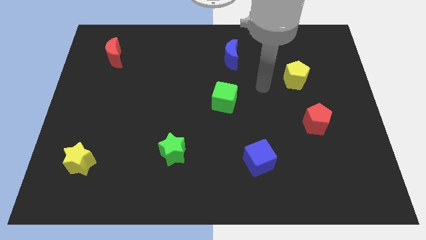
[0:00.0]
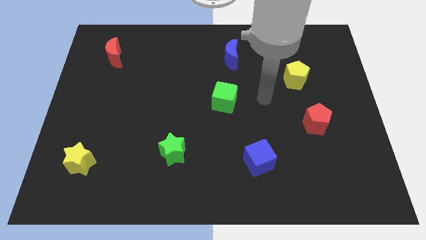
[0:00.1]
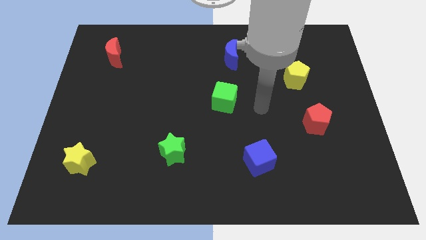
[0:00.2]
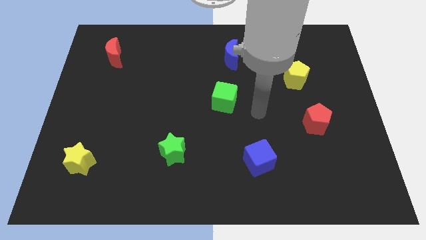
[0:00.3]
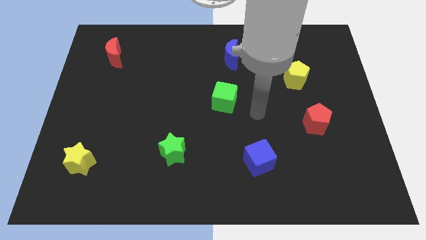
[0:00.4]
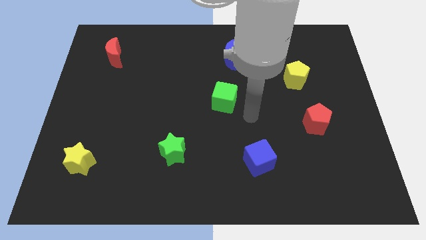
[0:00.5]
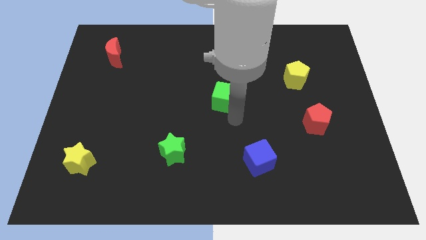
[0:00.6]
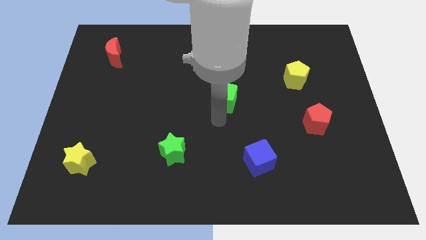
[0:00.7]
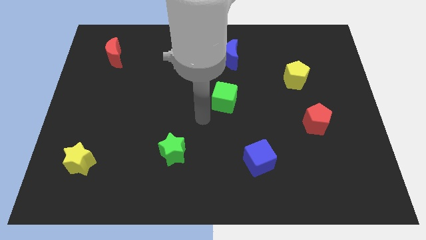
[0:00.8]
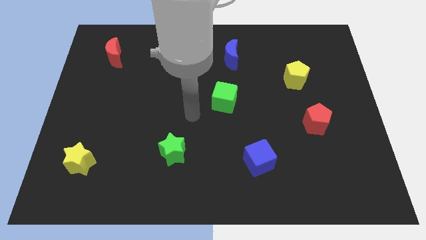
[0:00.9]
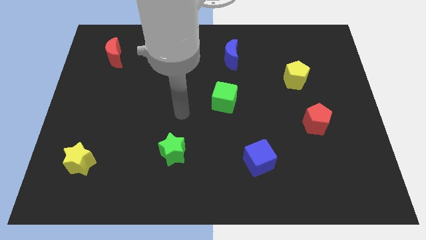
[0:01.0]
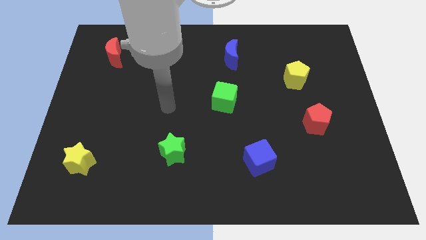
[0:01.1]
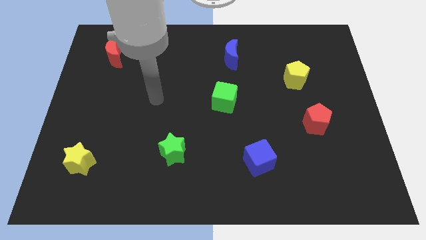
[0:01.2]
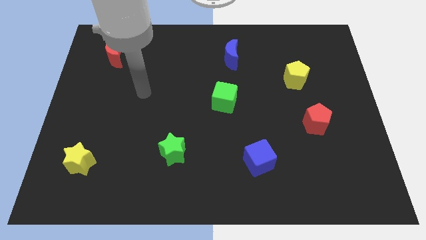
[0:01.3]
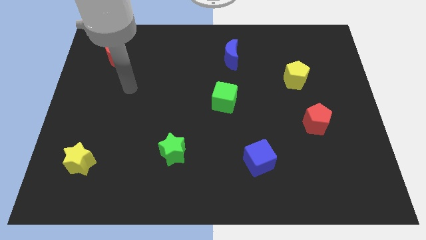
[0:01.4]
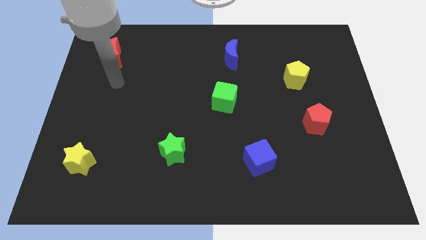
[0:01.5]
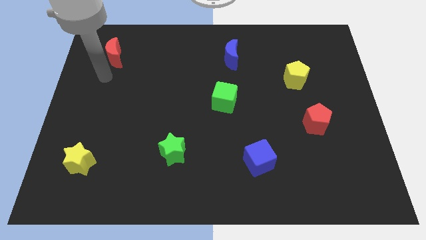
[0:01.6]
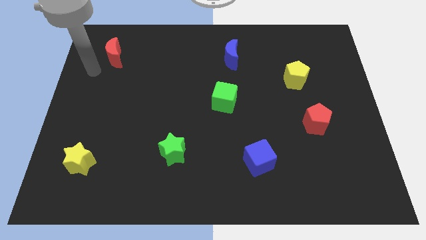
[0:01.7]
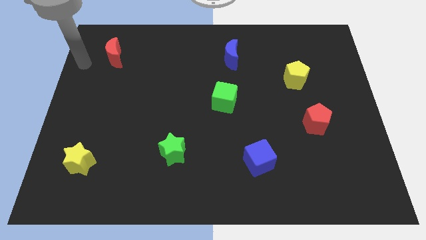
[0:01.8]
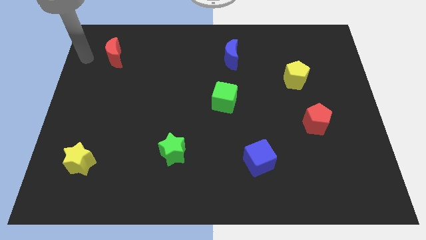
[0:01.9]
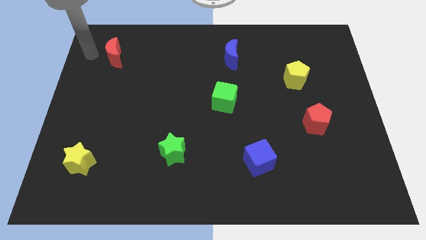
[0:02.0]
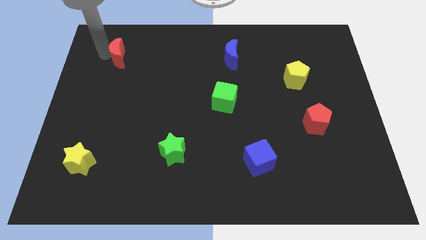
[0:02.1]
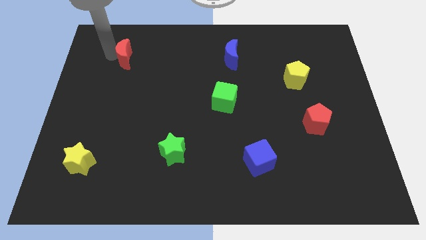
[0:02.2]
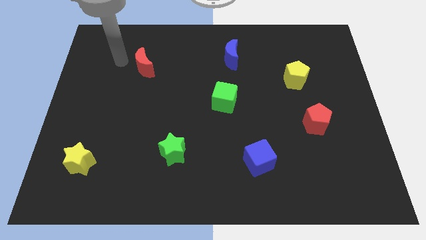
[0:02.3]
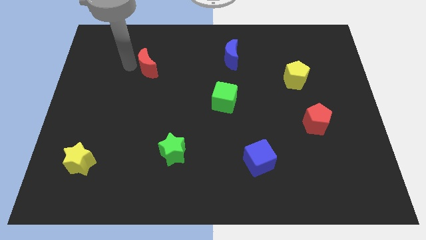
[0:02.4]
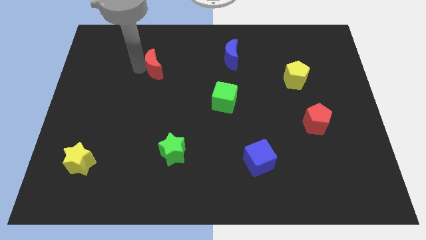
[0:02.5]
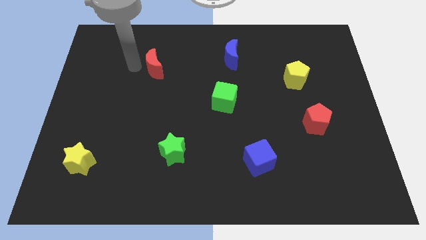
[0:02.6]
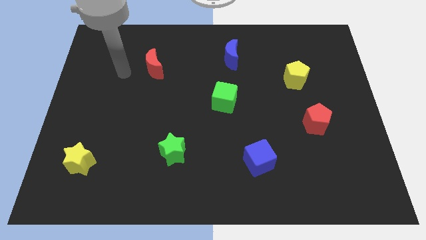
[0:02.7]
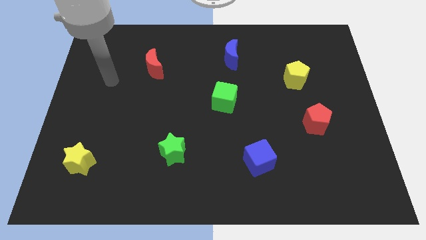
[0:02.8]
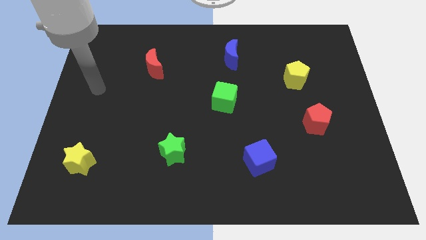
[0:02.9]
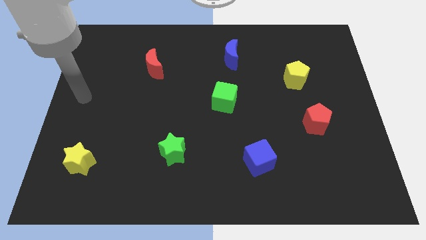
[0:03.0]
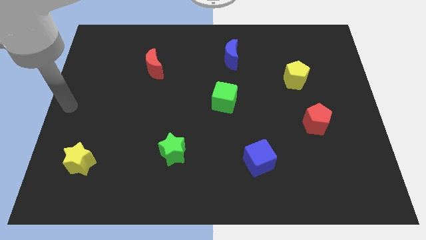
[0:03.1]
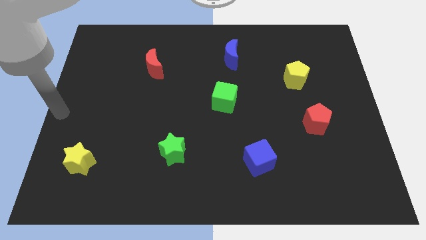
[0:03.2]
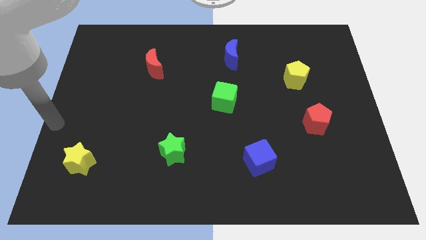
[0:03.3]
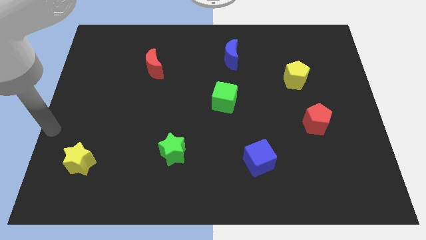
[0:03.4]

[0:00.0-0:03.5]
push red moon to the right side slightly

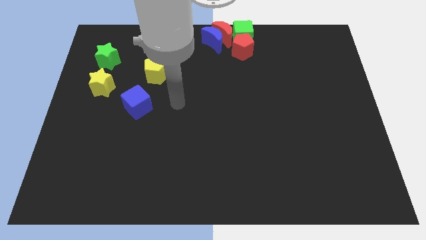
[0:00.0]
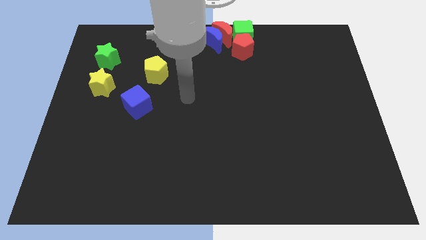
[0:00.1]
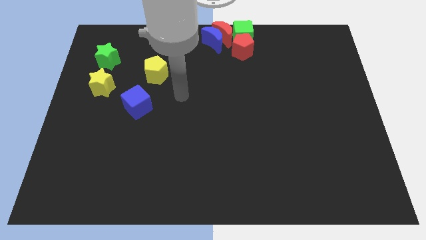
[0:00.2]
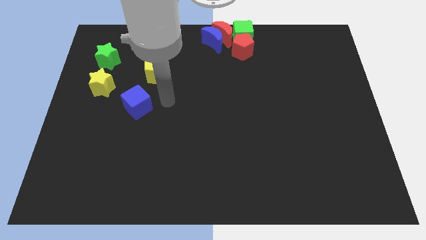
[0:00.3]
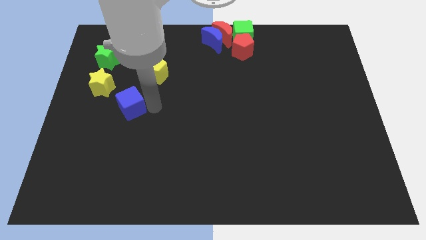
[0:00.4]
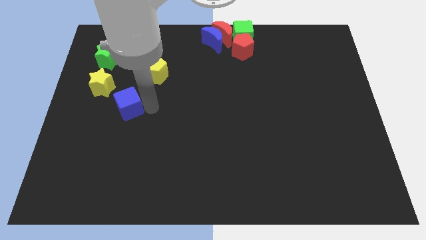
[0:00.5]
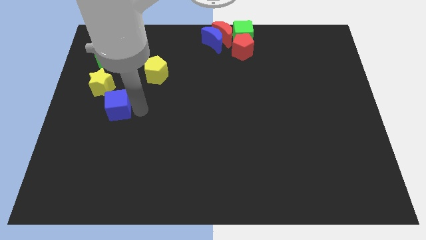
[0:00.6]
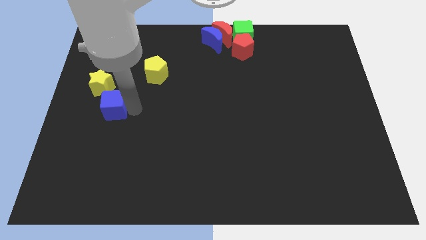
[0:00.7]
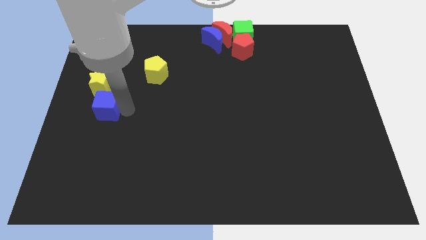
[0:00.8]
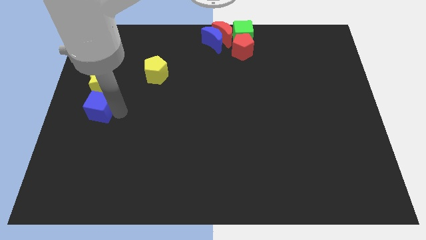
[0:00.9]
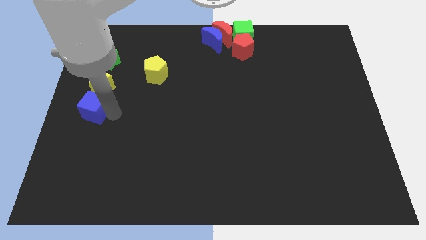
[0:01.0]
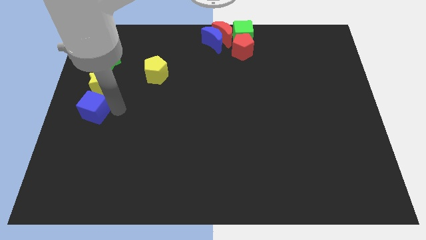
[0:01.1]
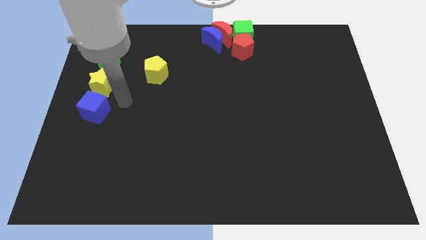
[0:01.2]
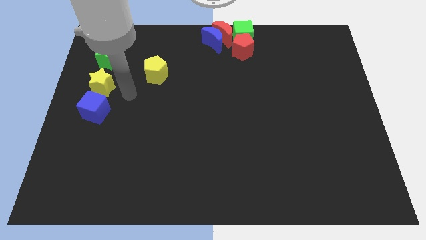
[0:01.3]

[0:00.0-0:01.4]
move the blue cube below the yellow star

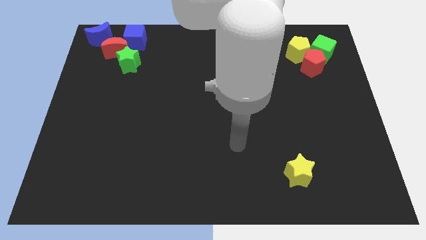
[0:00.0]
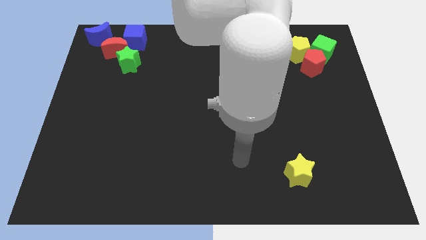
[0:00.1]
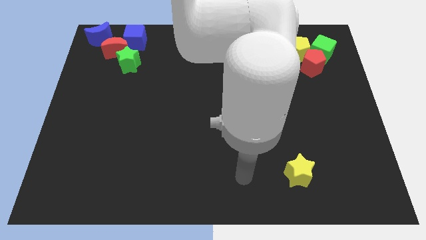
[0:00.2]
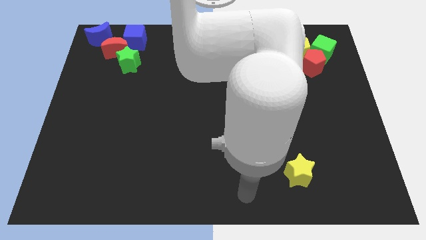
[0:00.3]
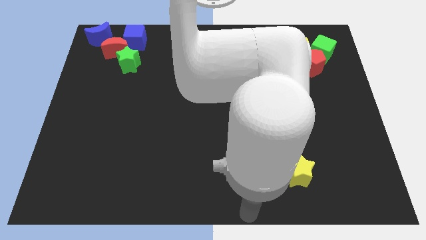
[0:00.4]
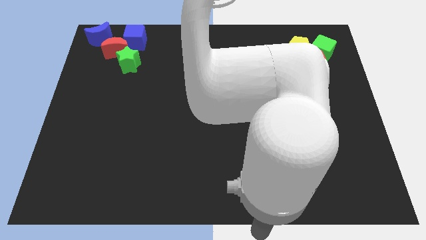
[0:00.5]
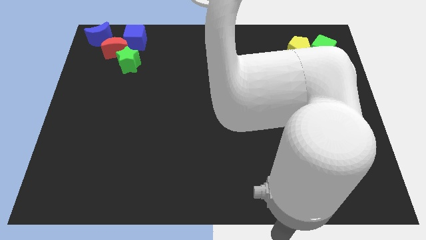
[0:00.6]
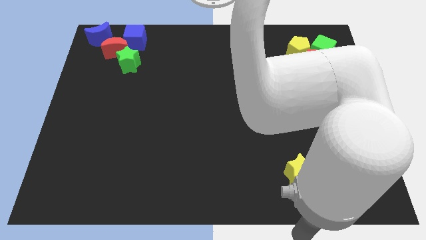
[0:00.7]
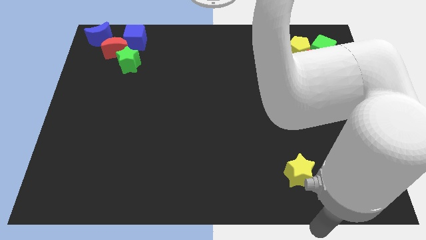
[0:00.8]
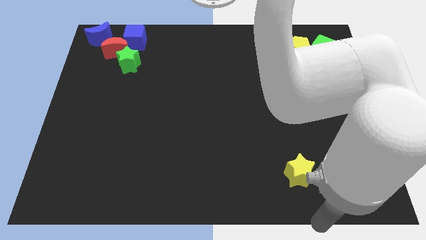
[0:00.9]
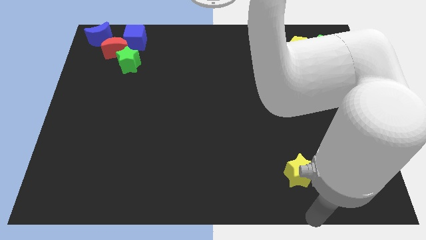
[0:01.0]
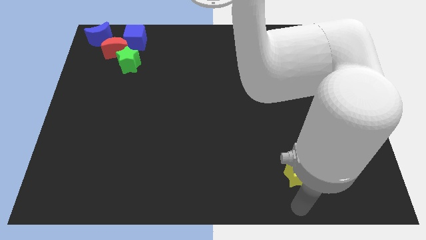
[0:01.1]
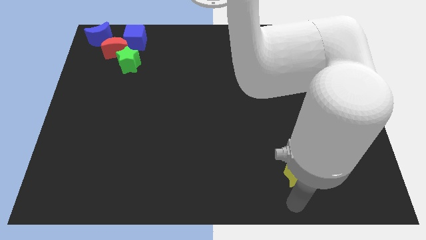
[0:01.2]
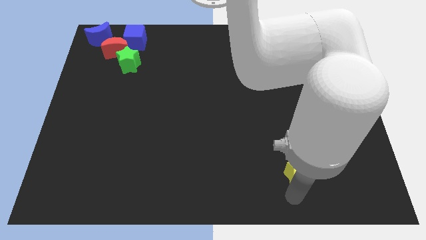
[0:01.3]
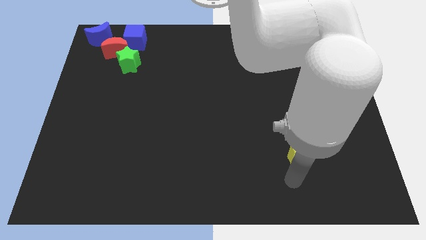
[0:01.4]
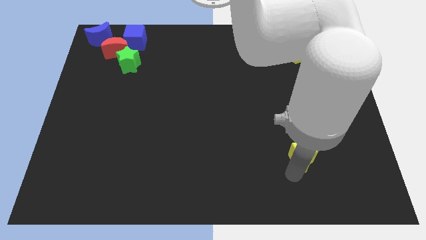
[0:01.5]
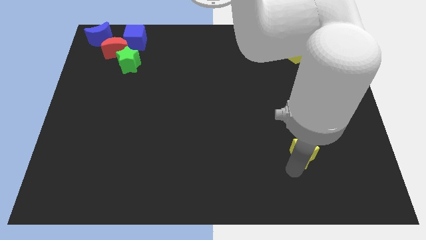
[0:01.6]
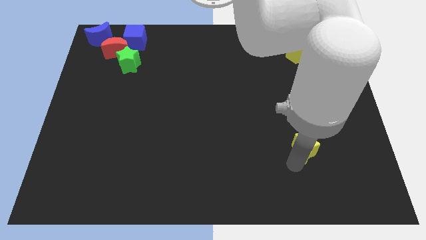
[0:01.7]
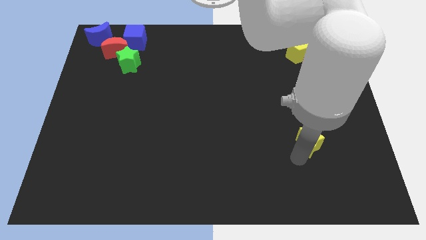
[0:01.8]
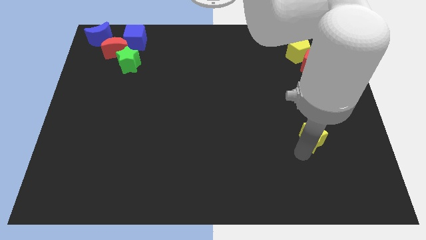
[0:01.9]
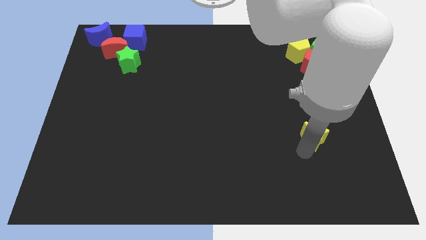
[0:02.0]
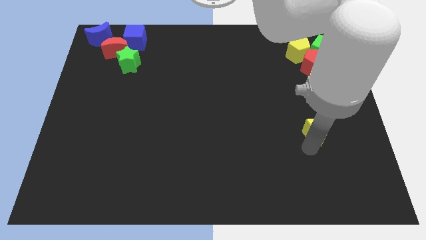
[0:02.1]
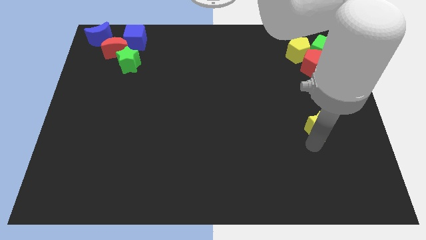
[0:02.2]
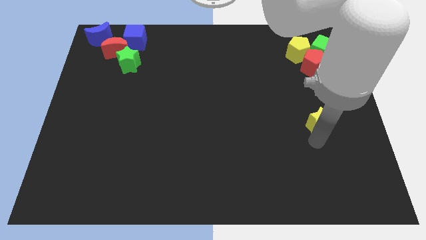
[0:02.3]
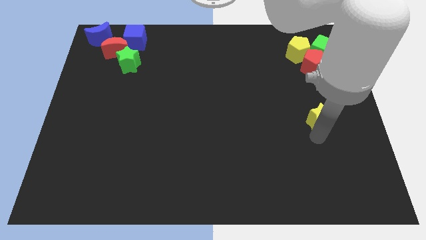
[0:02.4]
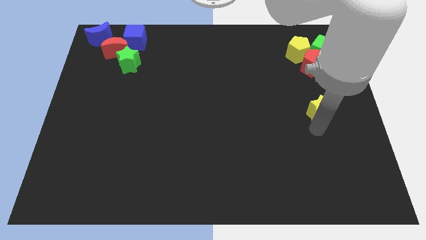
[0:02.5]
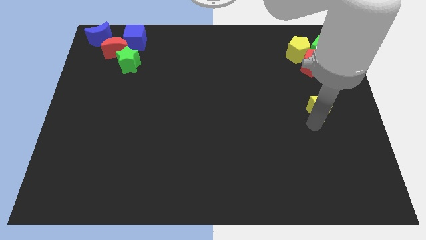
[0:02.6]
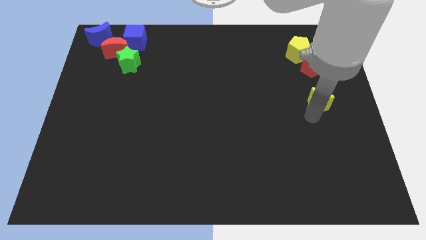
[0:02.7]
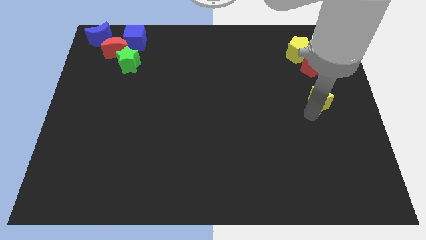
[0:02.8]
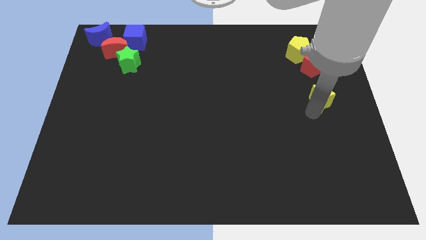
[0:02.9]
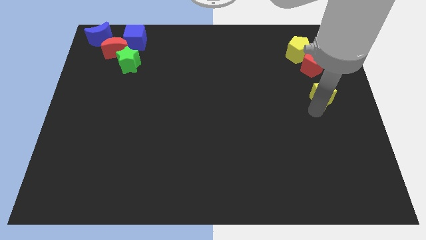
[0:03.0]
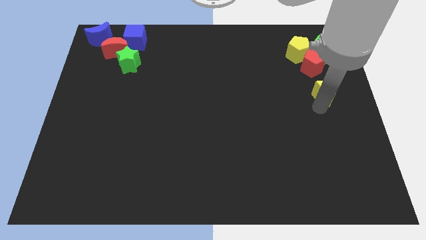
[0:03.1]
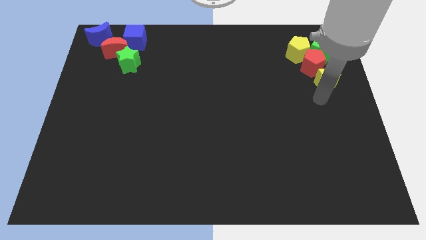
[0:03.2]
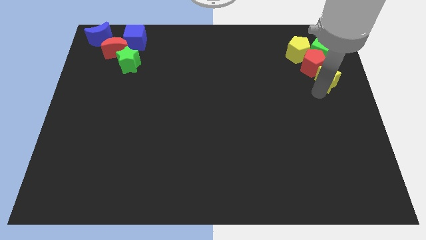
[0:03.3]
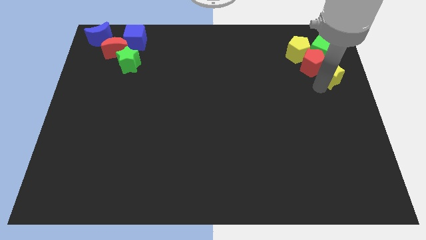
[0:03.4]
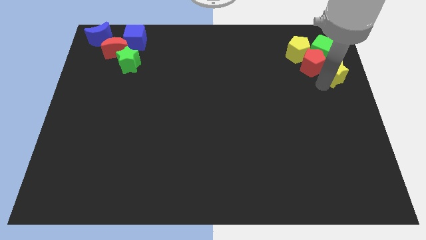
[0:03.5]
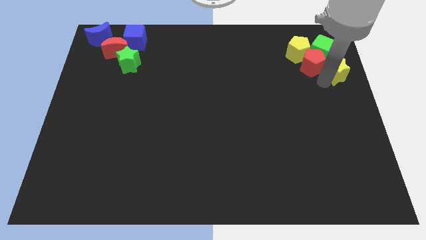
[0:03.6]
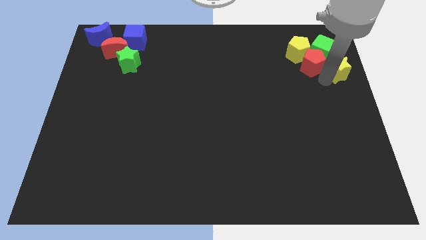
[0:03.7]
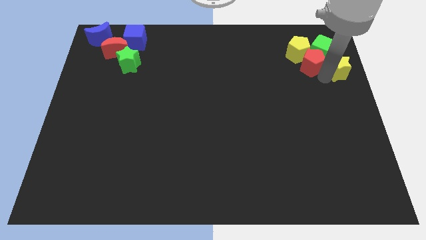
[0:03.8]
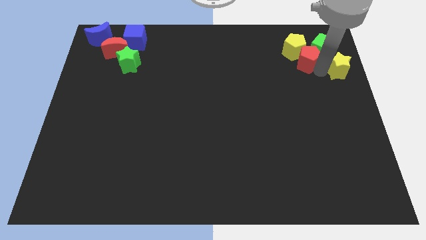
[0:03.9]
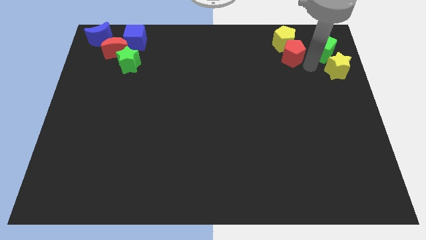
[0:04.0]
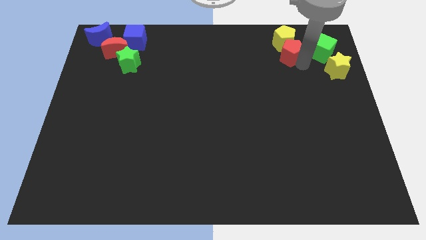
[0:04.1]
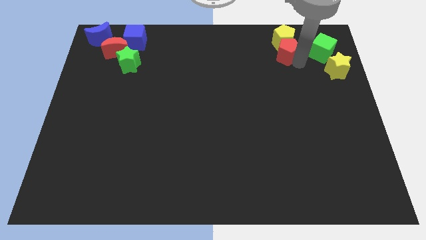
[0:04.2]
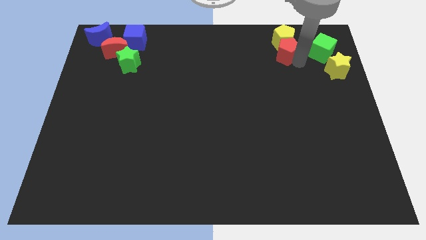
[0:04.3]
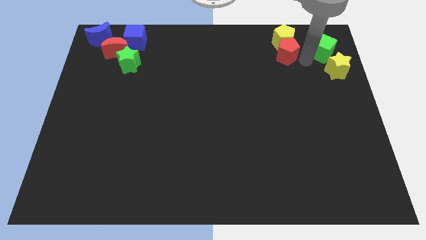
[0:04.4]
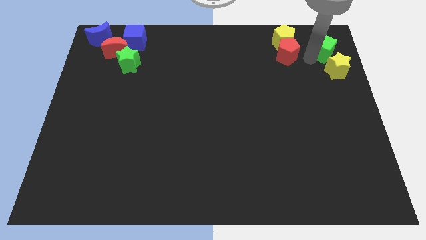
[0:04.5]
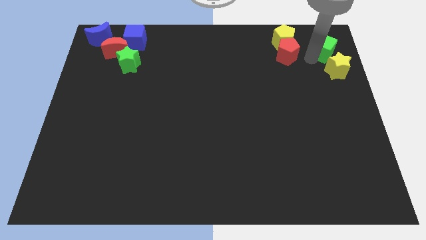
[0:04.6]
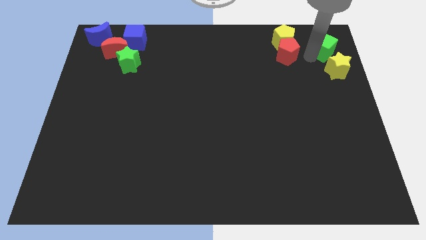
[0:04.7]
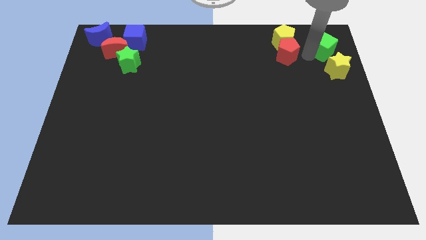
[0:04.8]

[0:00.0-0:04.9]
move the yellow star below the green star
